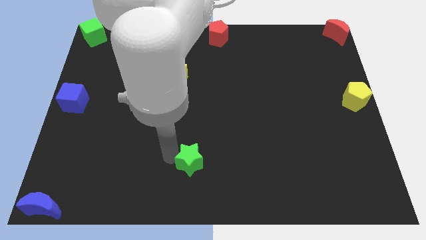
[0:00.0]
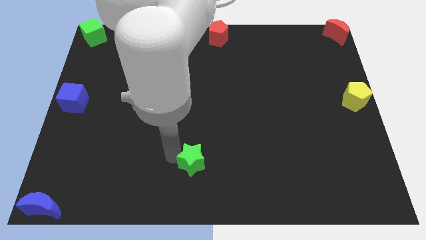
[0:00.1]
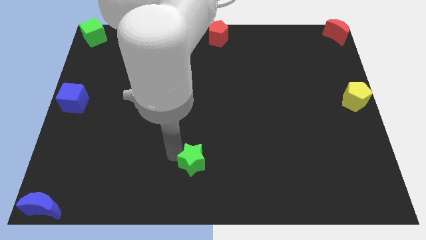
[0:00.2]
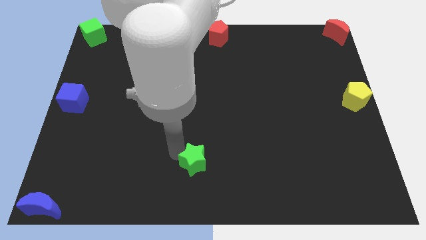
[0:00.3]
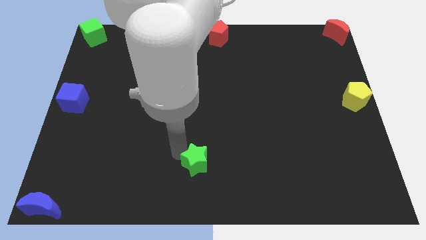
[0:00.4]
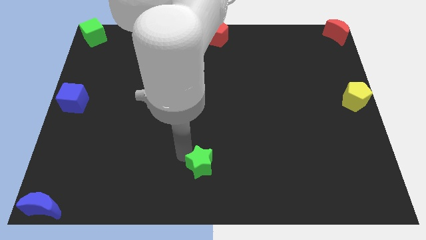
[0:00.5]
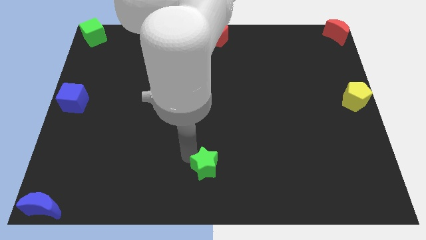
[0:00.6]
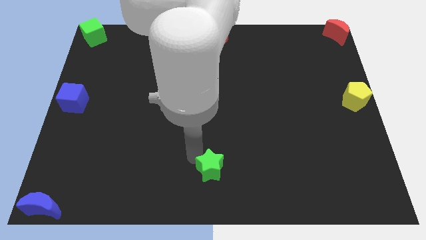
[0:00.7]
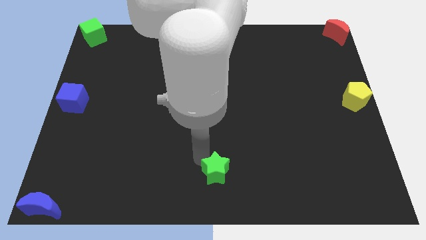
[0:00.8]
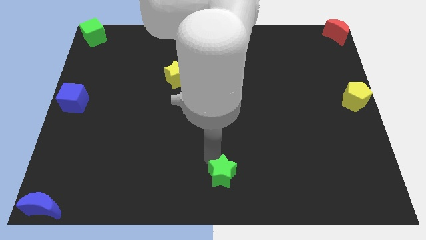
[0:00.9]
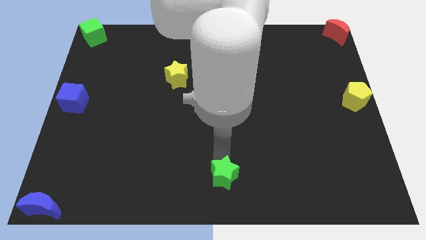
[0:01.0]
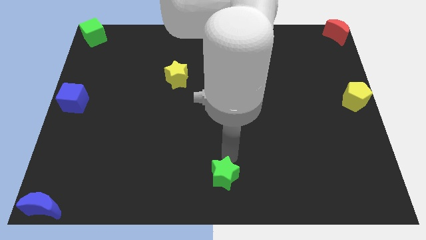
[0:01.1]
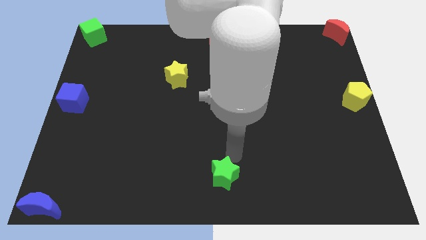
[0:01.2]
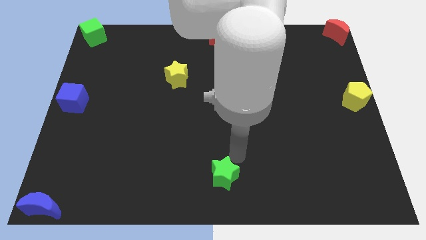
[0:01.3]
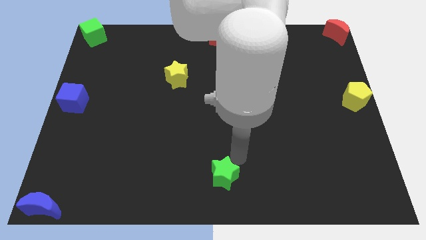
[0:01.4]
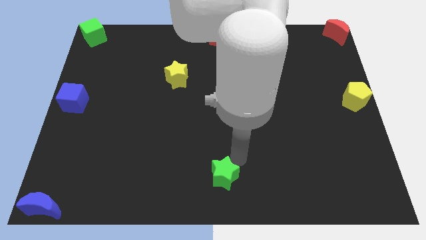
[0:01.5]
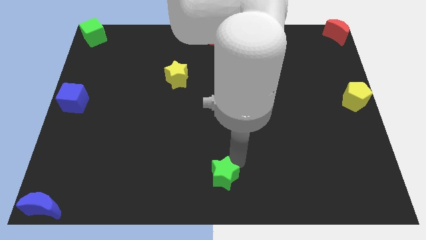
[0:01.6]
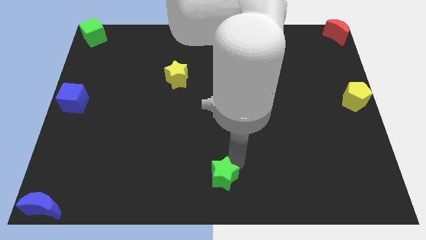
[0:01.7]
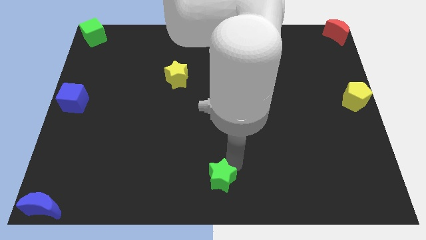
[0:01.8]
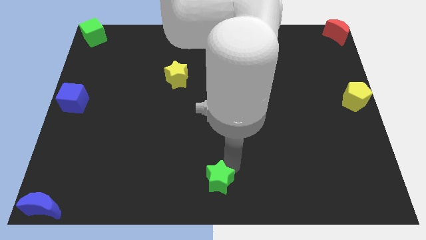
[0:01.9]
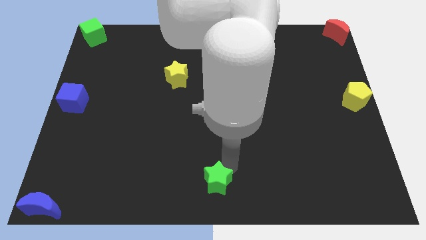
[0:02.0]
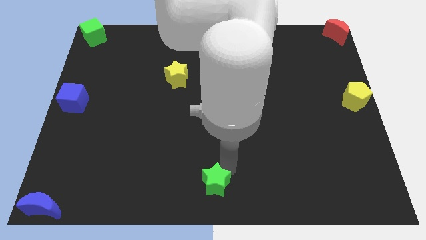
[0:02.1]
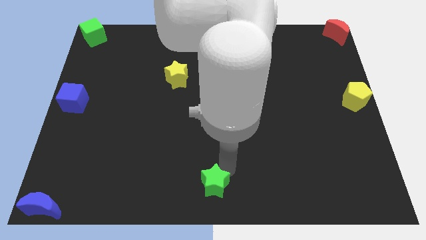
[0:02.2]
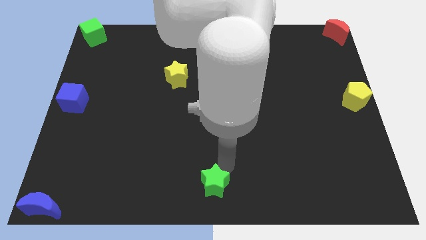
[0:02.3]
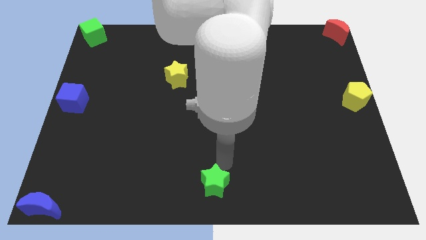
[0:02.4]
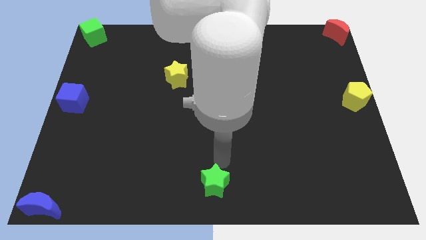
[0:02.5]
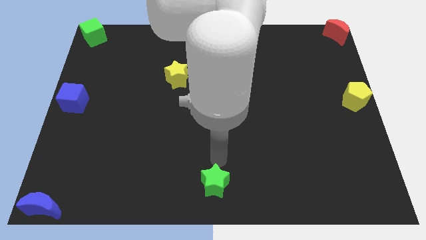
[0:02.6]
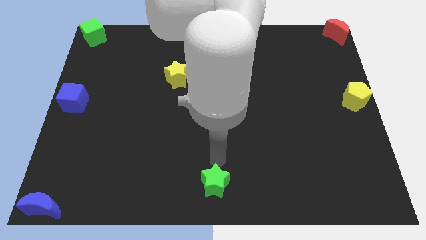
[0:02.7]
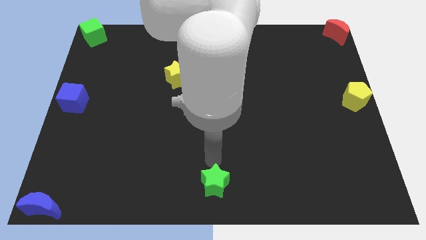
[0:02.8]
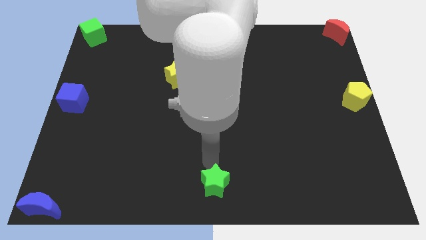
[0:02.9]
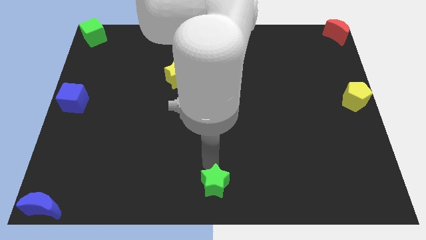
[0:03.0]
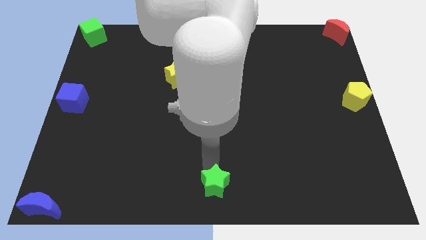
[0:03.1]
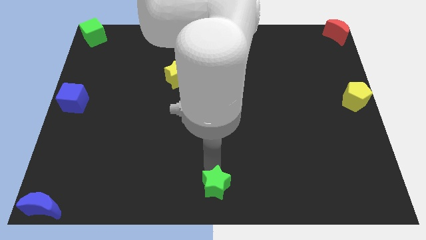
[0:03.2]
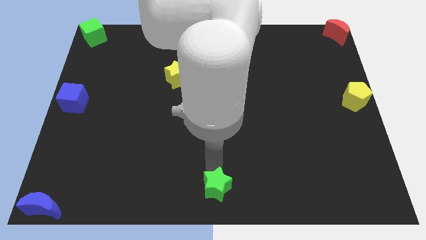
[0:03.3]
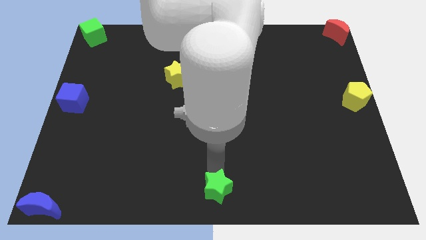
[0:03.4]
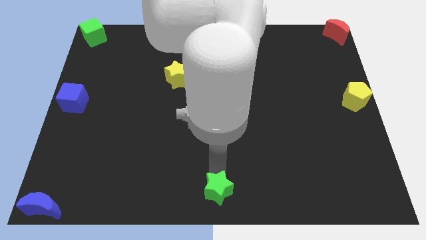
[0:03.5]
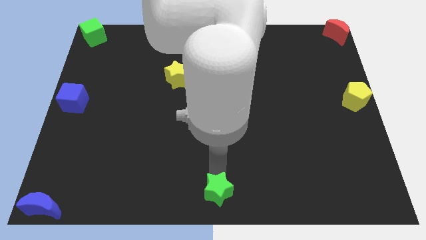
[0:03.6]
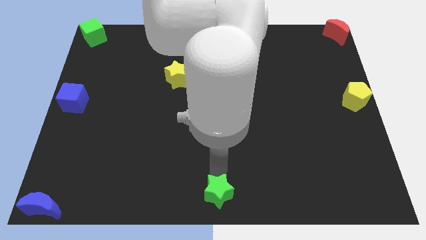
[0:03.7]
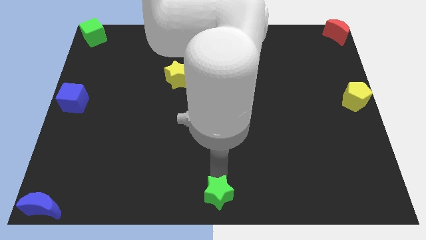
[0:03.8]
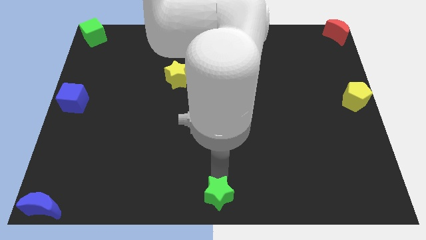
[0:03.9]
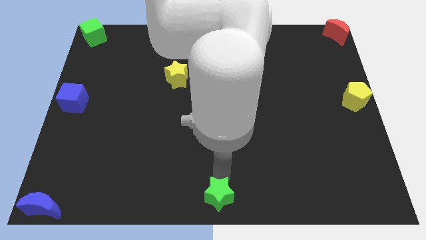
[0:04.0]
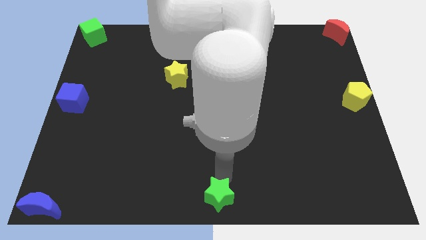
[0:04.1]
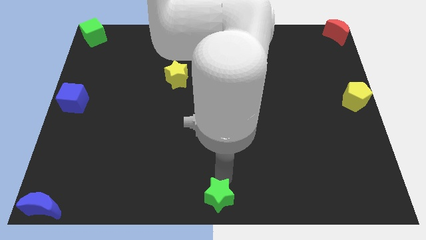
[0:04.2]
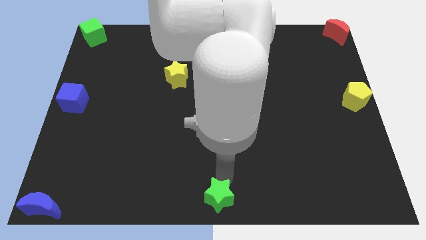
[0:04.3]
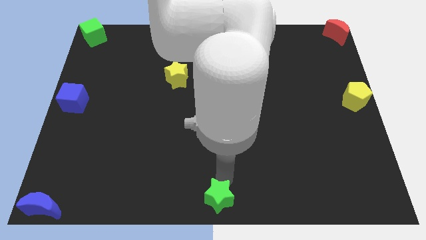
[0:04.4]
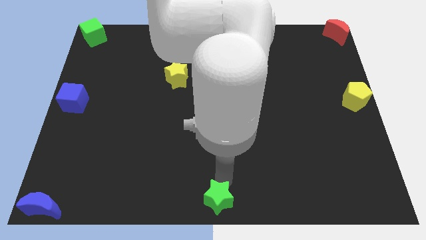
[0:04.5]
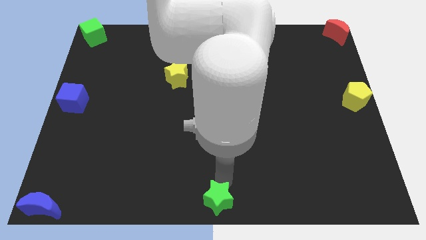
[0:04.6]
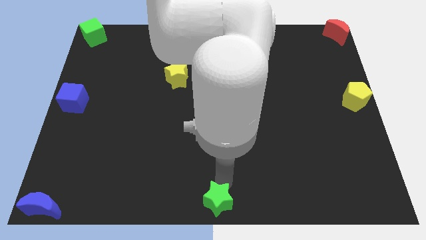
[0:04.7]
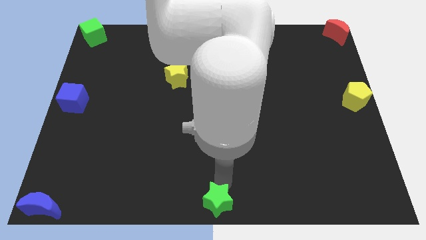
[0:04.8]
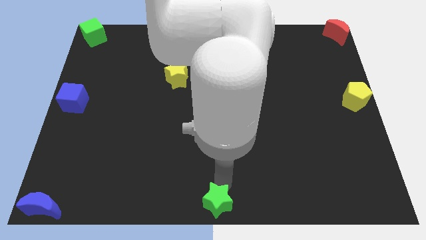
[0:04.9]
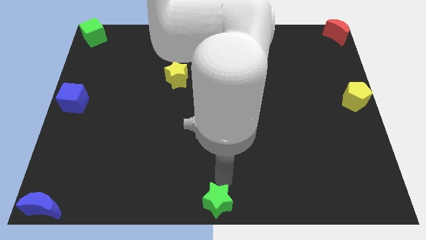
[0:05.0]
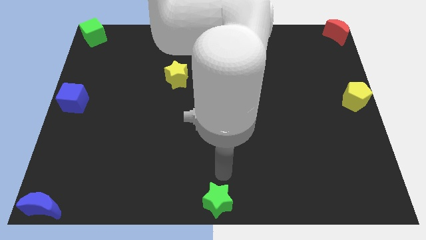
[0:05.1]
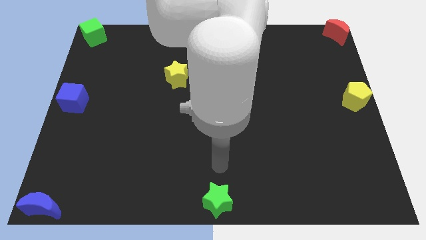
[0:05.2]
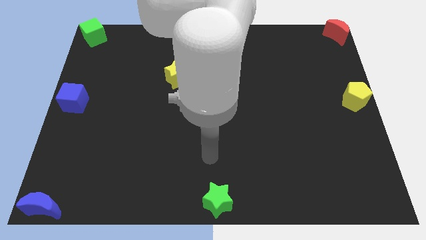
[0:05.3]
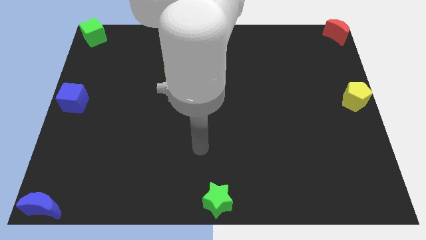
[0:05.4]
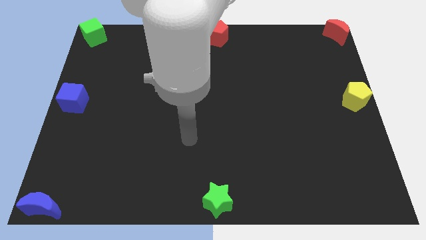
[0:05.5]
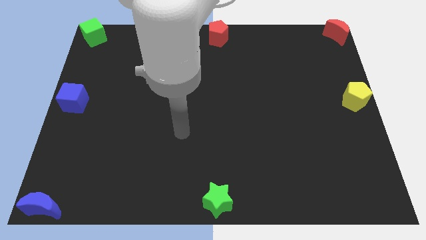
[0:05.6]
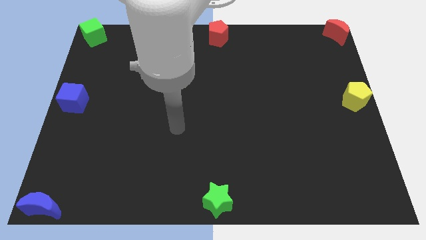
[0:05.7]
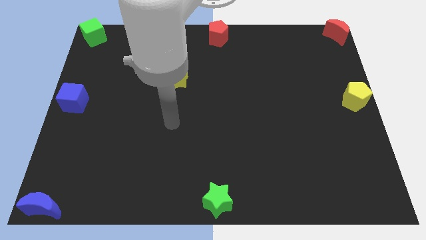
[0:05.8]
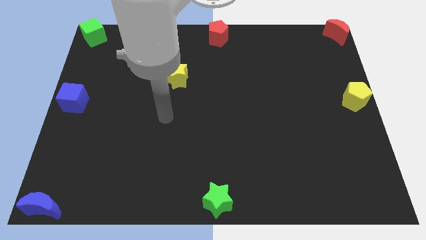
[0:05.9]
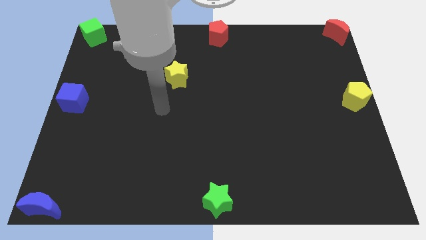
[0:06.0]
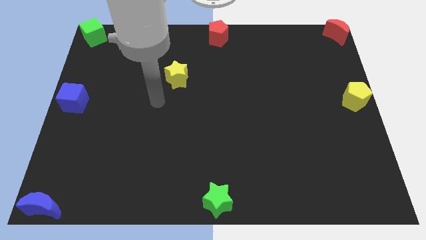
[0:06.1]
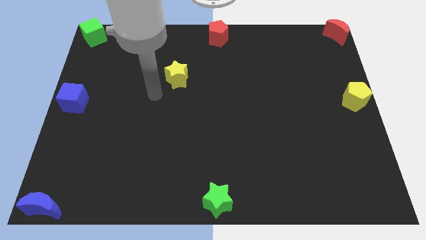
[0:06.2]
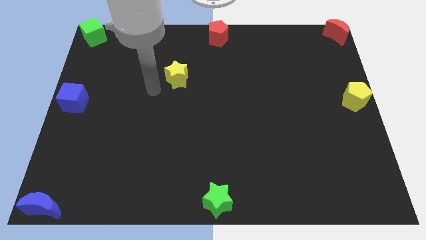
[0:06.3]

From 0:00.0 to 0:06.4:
place the green star towards the bottom center of the board

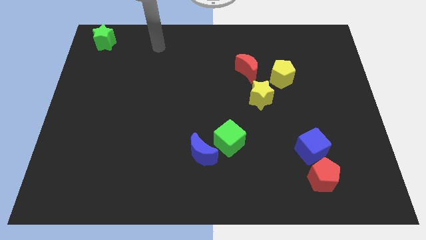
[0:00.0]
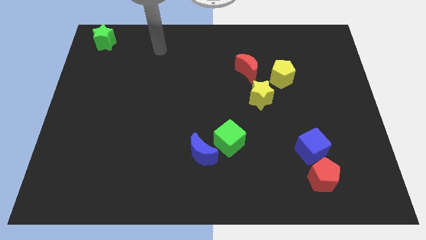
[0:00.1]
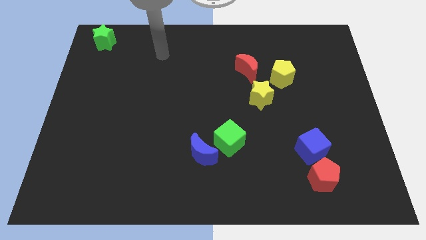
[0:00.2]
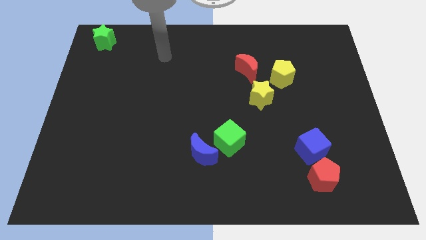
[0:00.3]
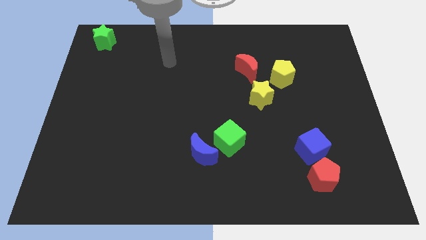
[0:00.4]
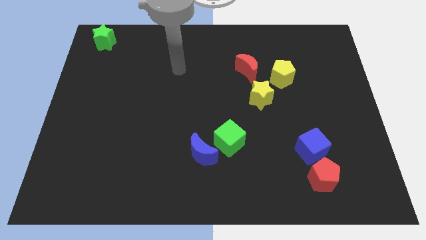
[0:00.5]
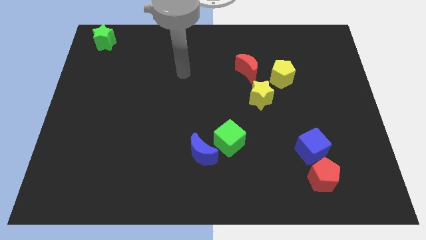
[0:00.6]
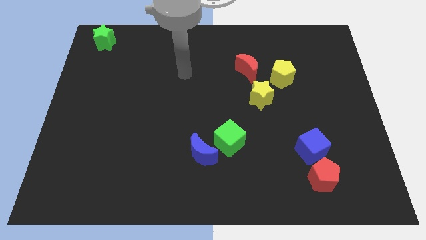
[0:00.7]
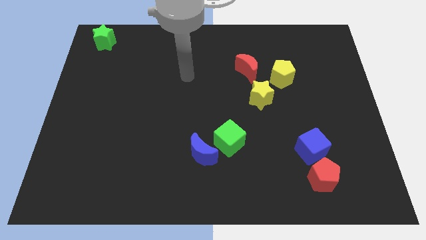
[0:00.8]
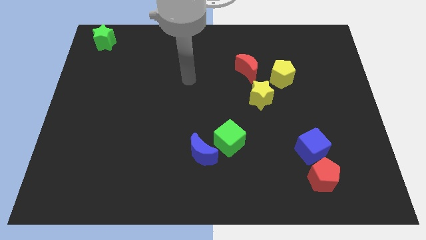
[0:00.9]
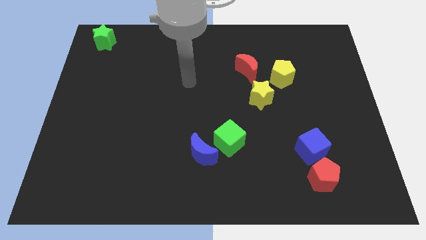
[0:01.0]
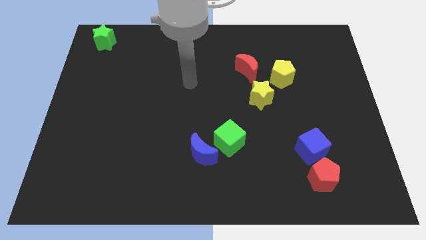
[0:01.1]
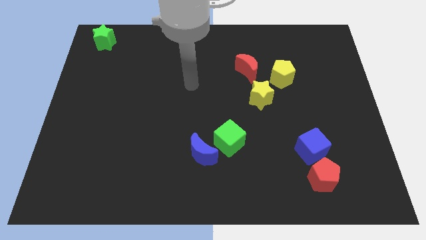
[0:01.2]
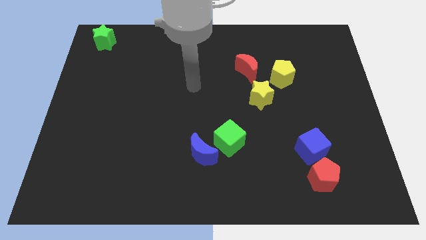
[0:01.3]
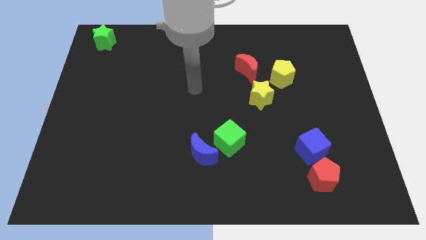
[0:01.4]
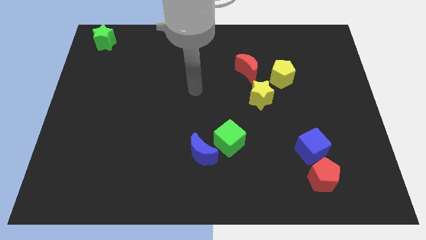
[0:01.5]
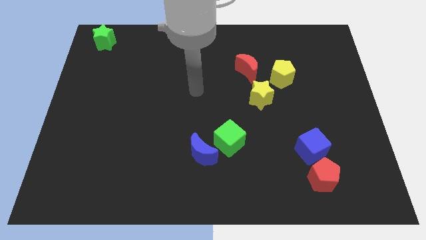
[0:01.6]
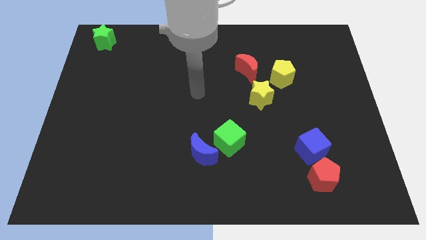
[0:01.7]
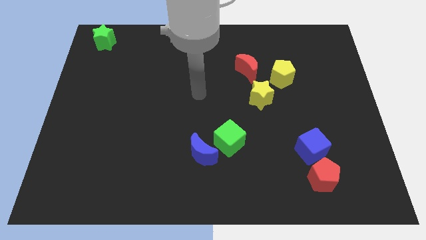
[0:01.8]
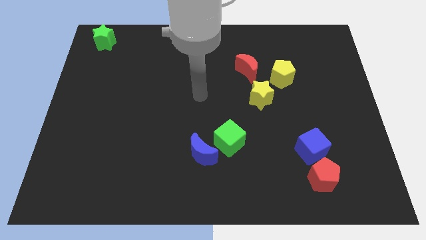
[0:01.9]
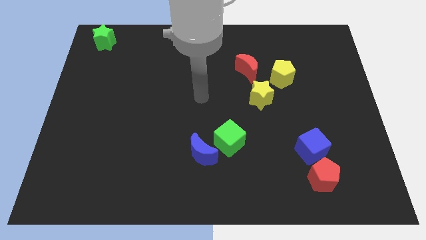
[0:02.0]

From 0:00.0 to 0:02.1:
put your arm vertically above the blue crescent

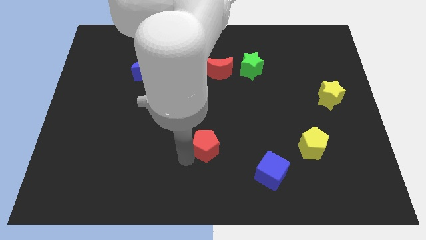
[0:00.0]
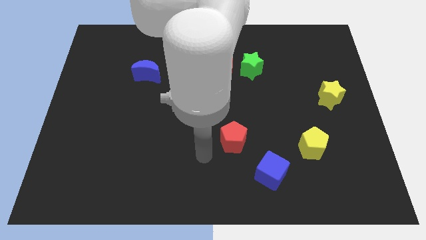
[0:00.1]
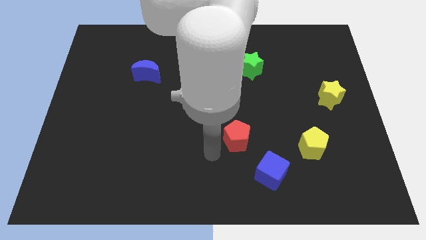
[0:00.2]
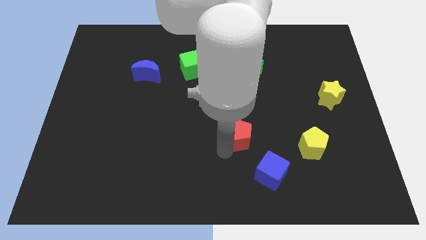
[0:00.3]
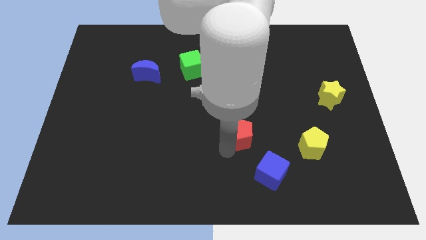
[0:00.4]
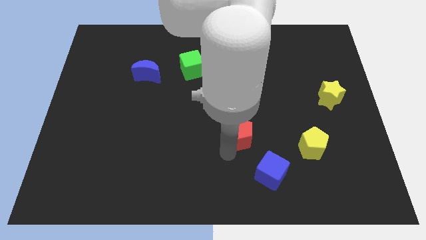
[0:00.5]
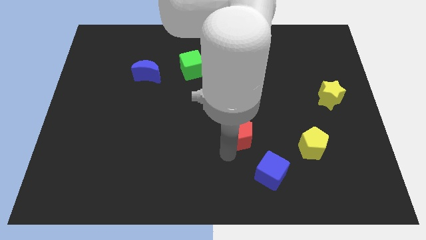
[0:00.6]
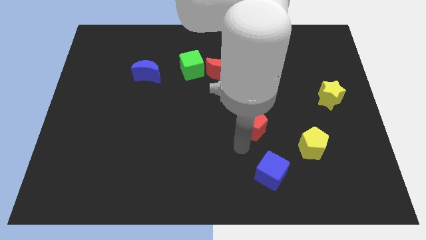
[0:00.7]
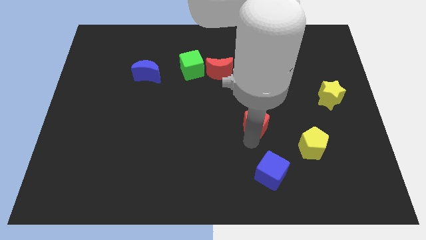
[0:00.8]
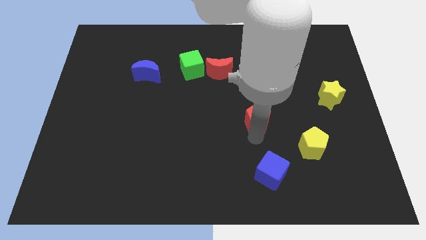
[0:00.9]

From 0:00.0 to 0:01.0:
drag the red pentagon to the right
